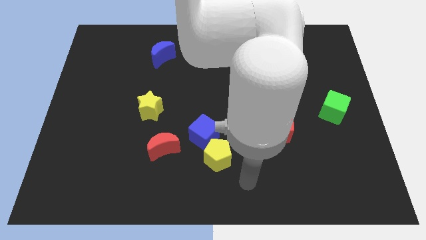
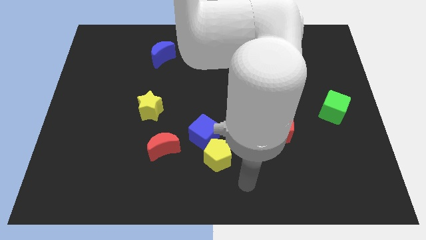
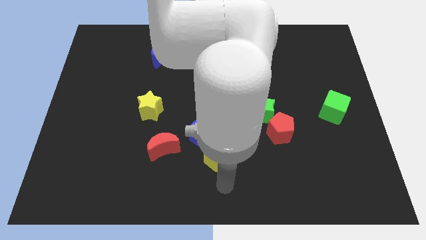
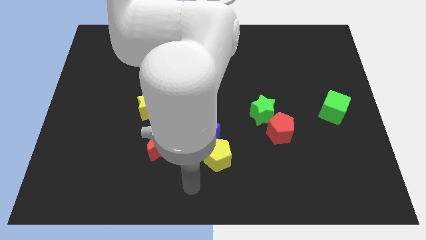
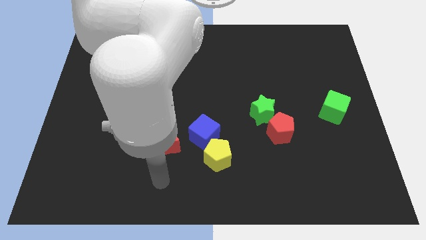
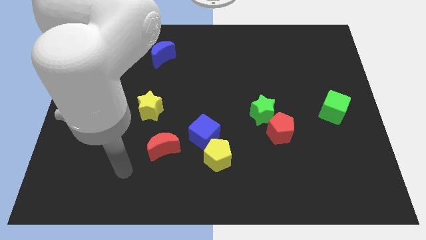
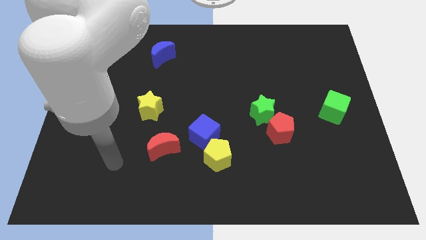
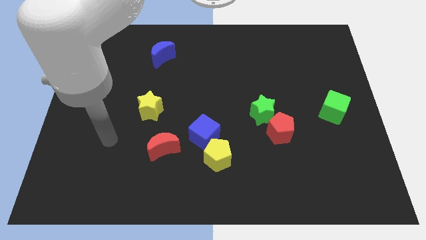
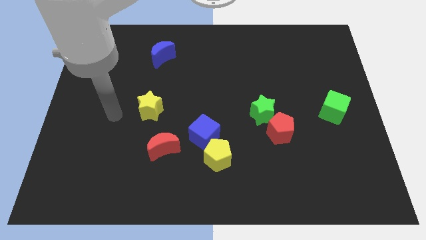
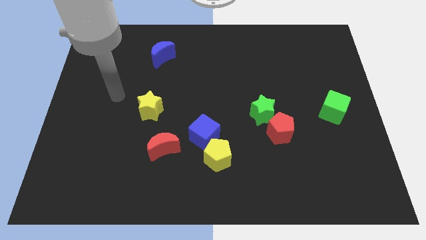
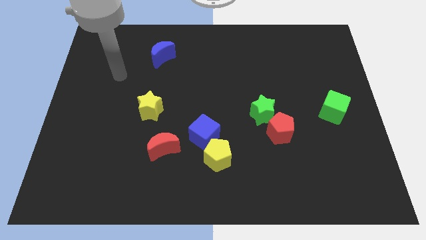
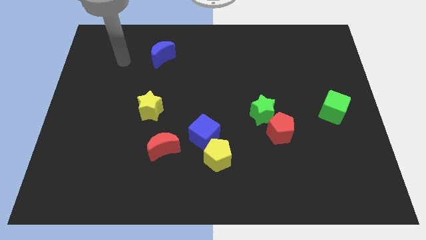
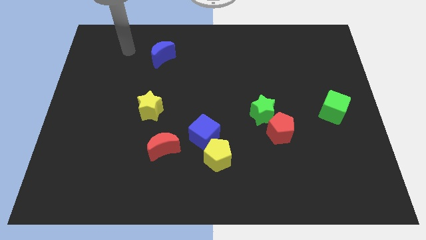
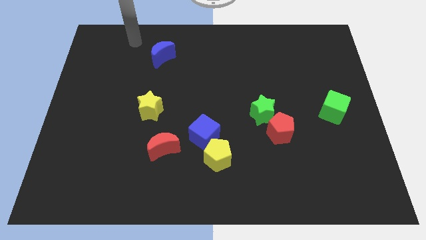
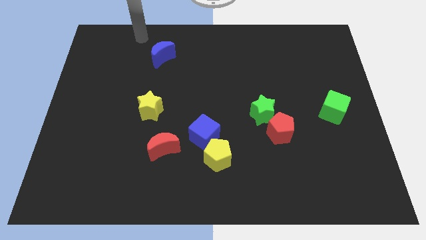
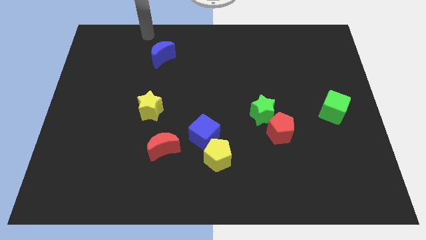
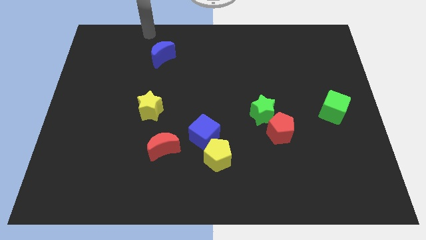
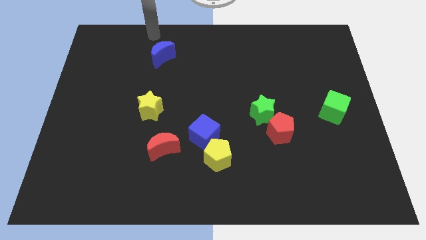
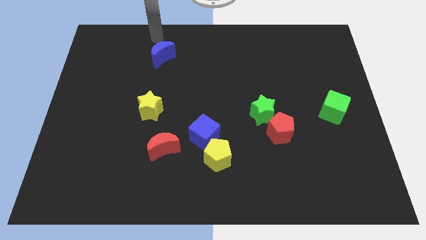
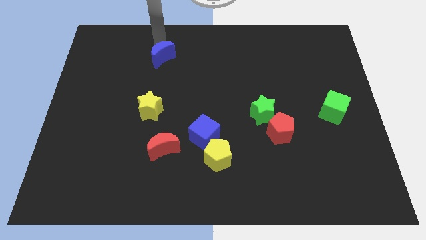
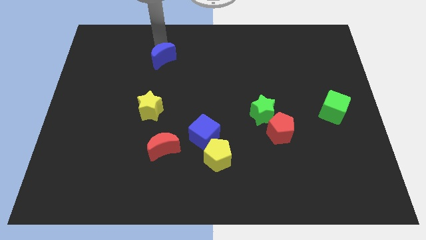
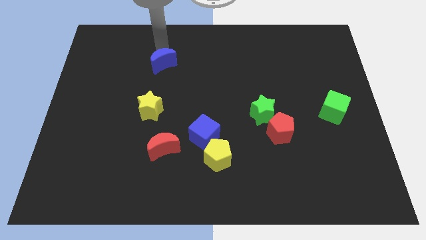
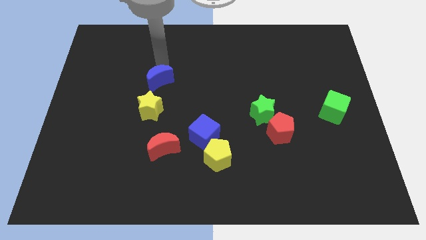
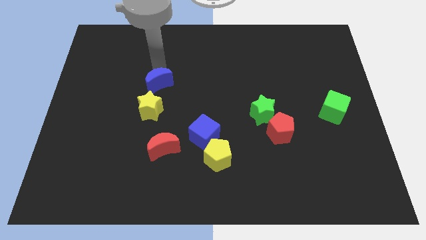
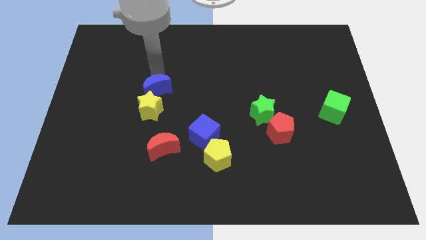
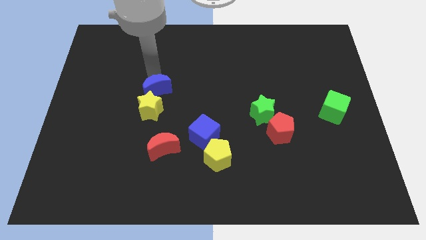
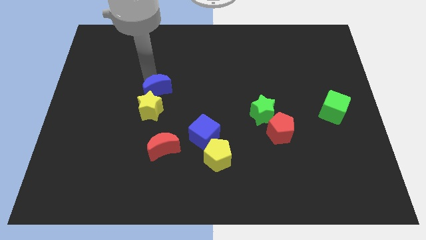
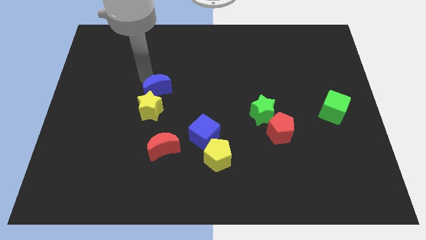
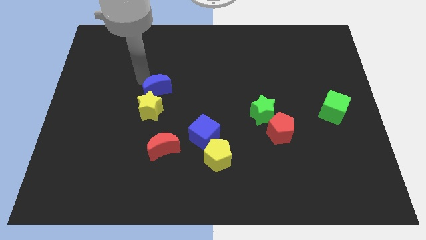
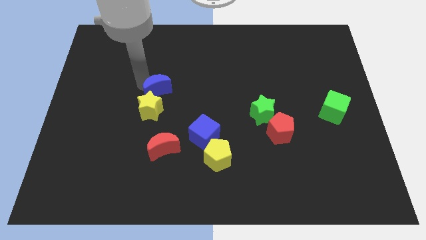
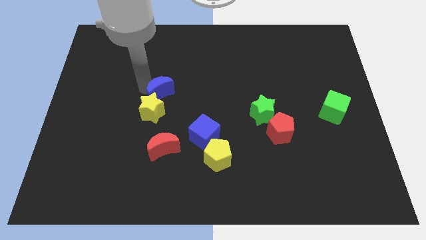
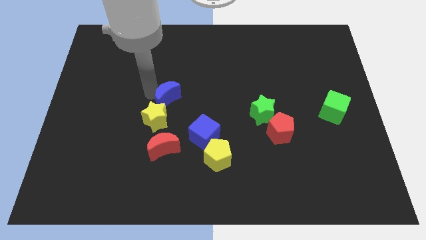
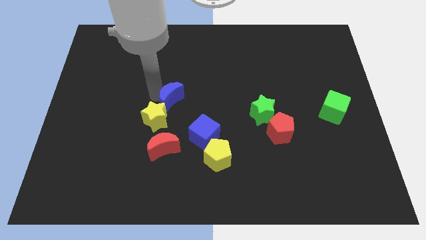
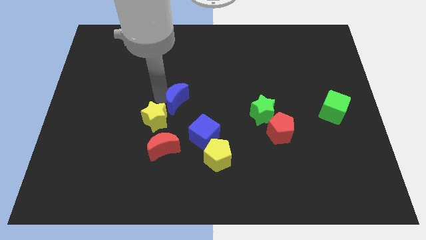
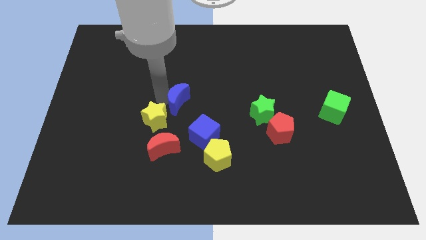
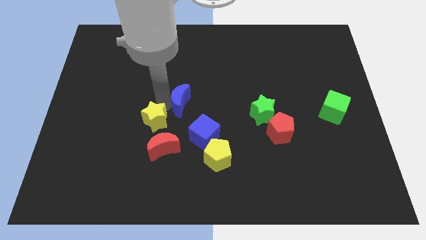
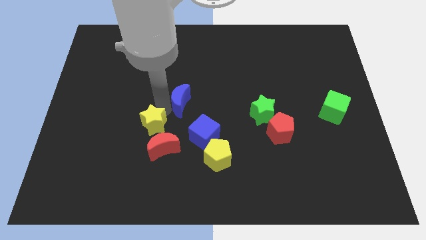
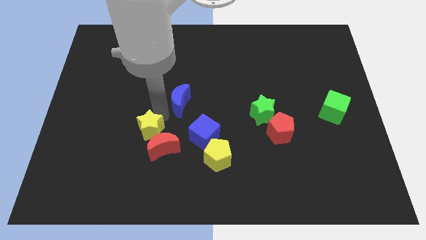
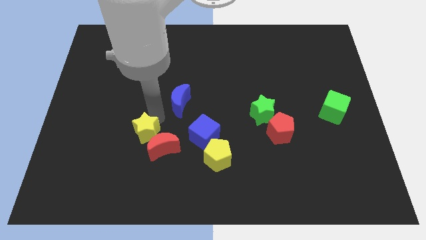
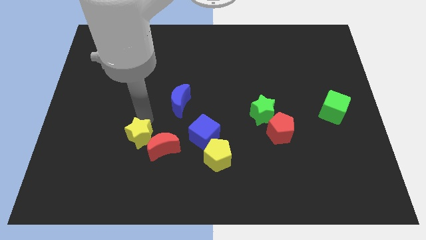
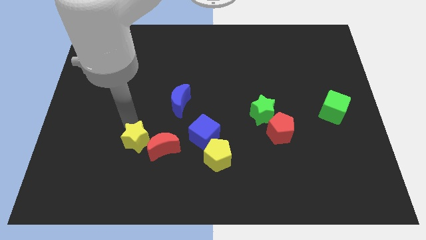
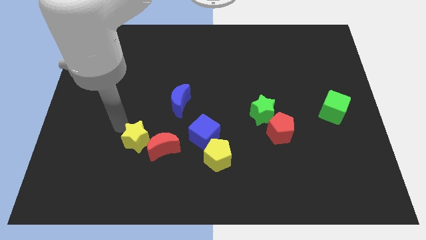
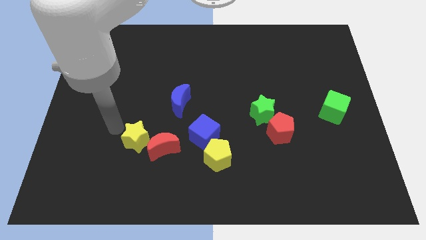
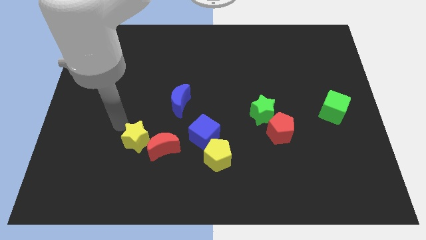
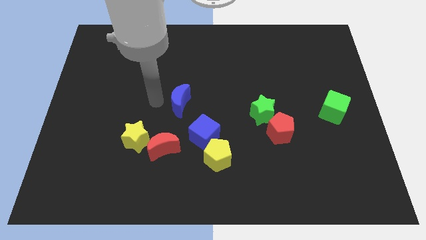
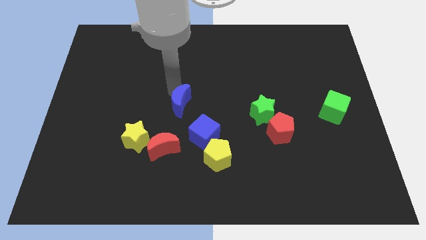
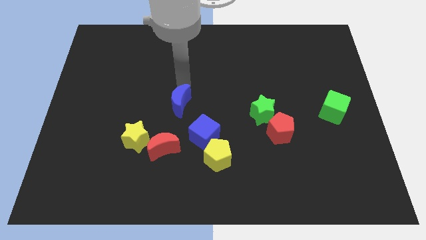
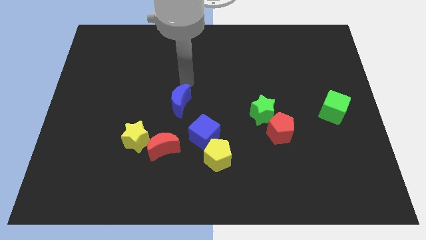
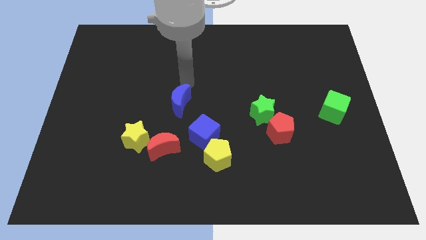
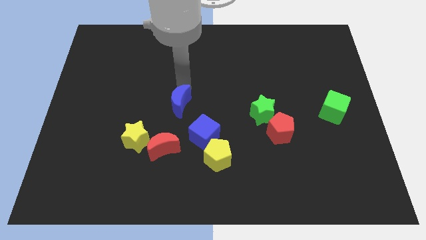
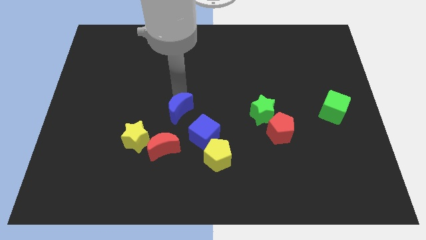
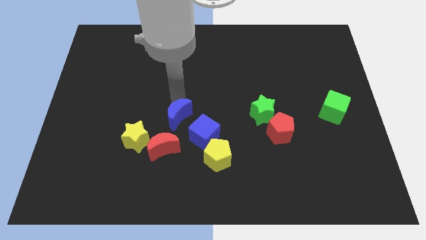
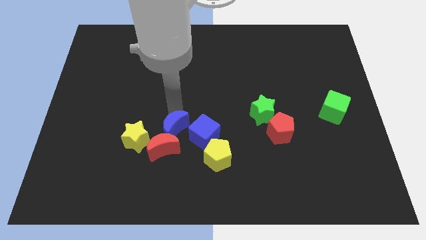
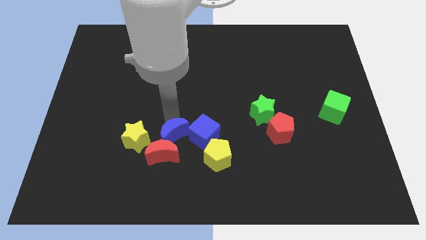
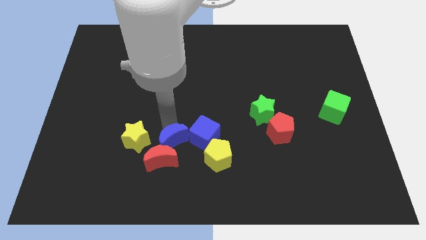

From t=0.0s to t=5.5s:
push the blue moon next to the red moon

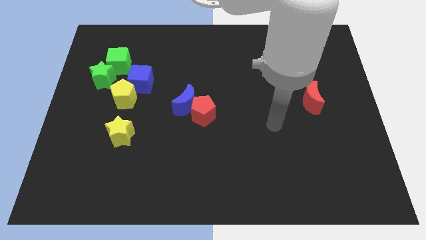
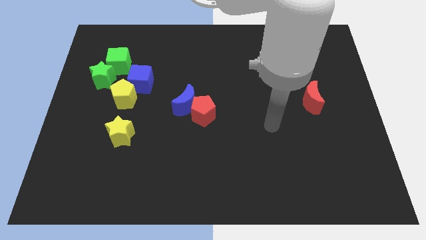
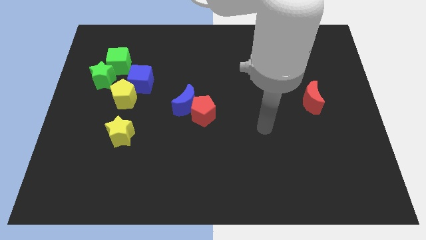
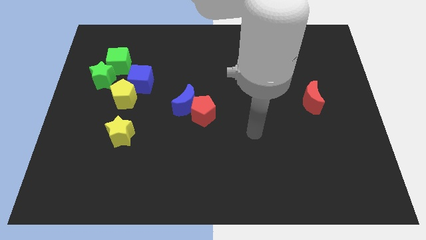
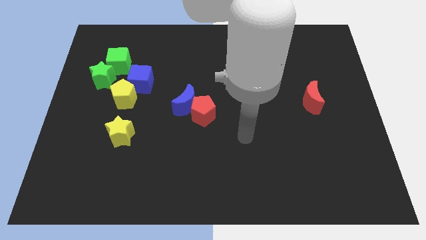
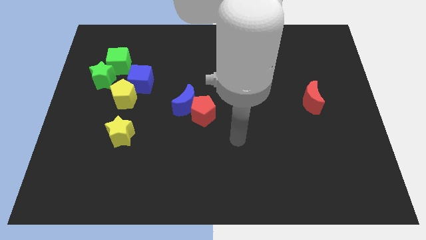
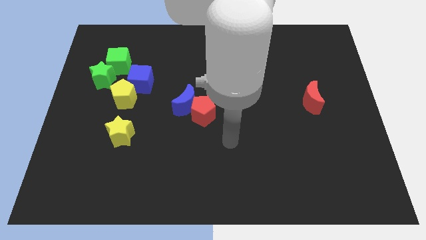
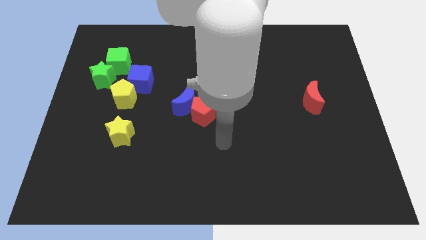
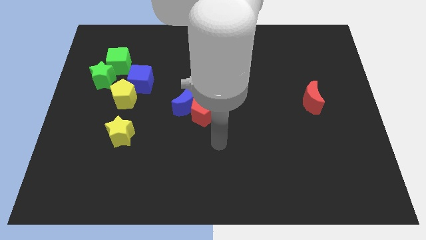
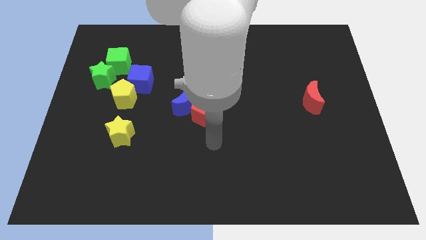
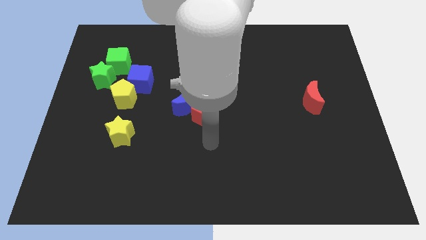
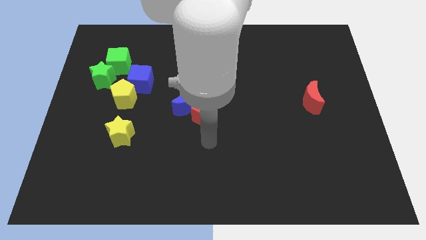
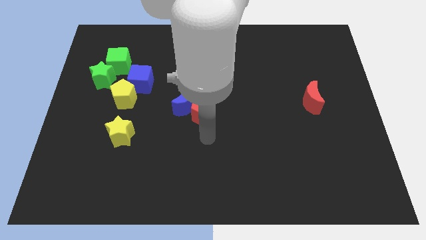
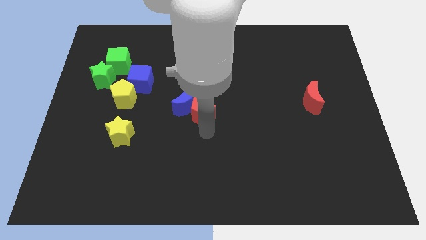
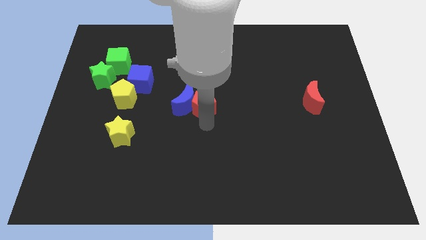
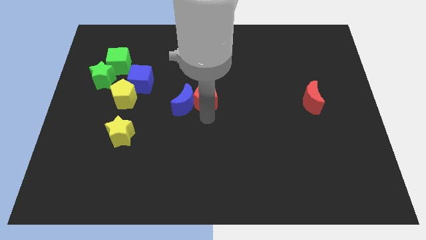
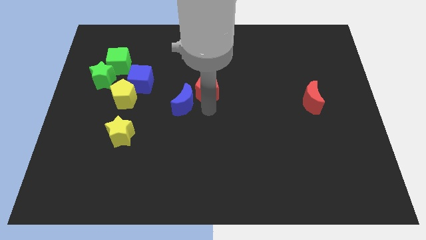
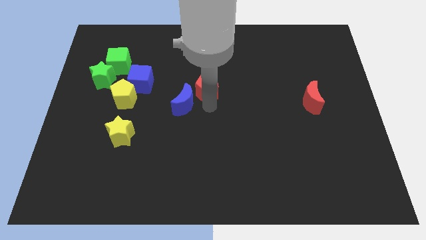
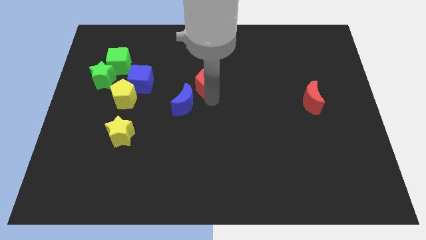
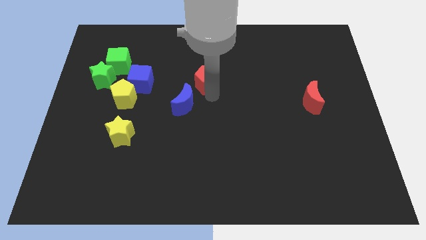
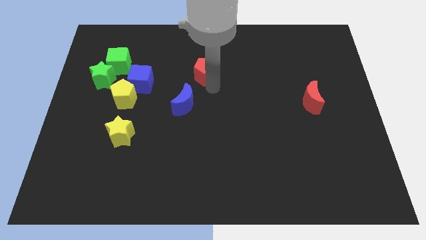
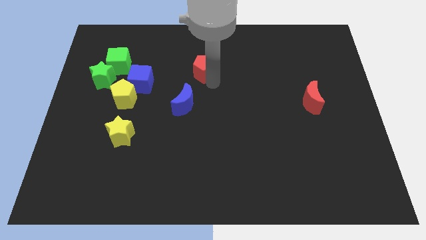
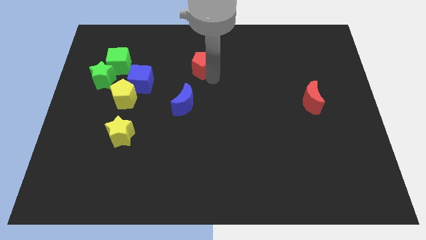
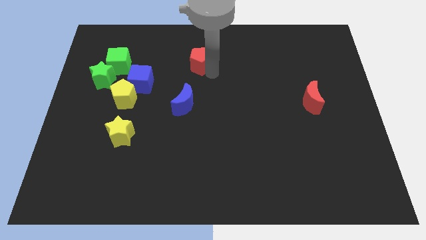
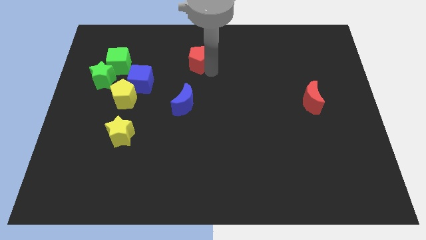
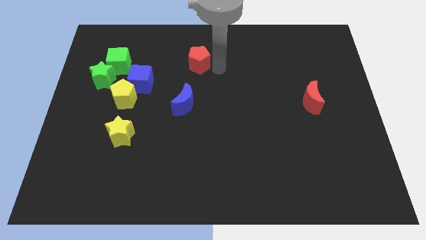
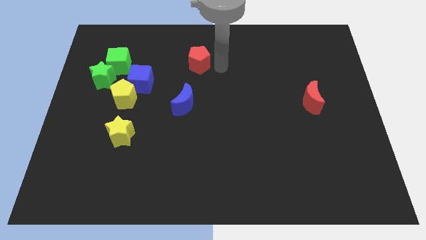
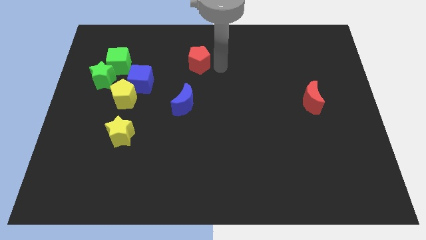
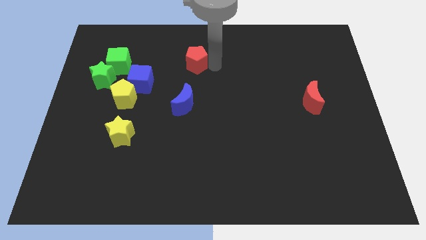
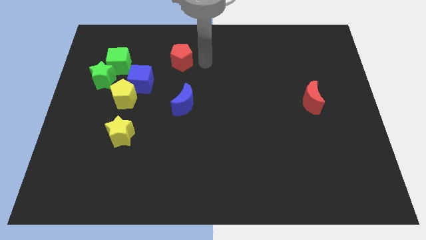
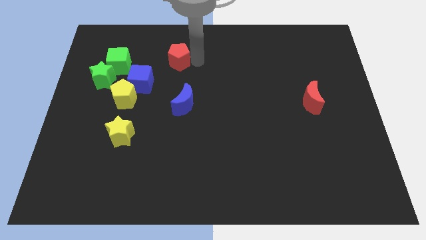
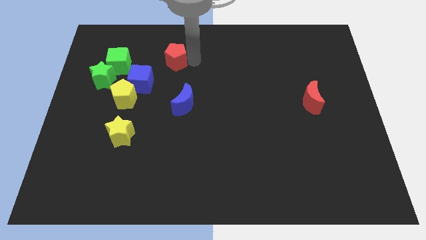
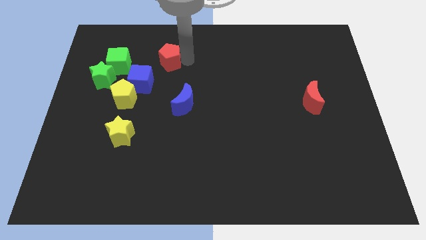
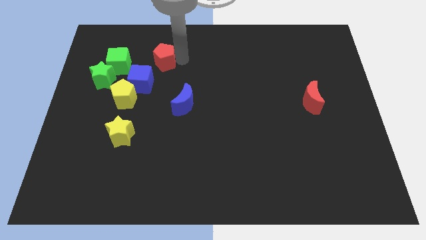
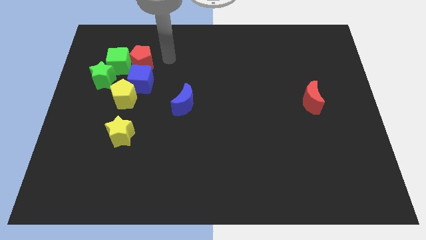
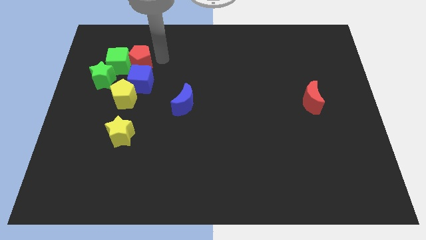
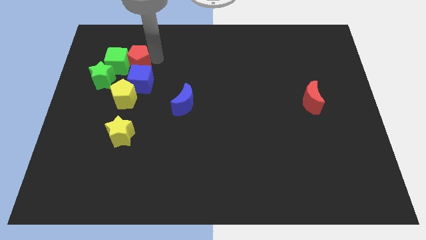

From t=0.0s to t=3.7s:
put the red pentagon next to the green cube
